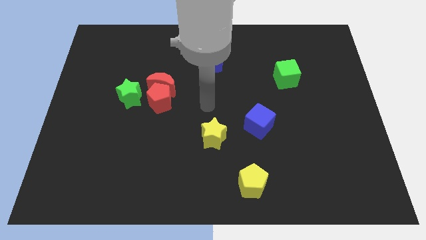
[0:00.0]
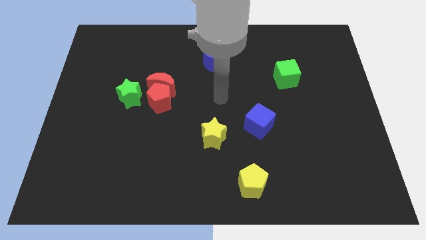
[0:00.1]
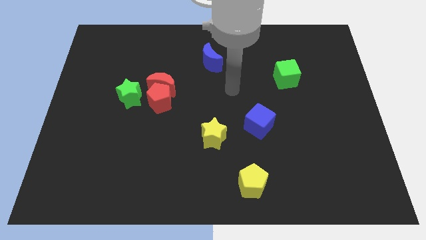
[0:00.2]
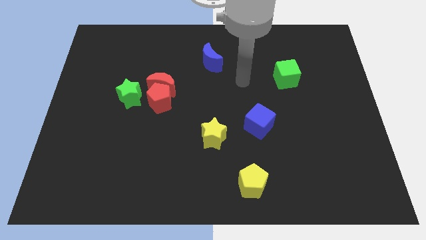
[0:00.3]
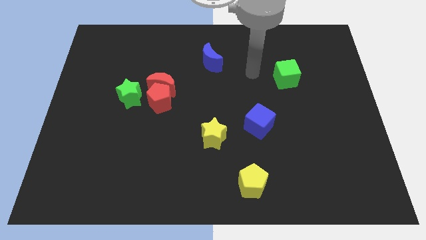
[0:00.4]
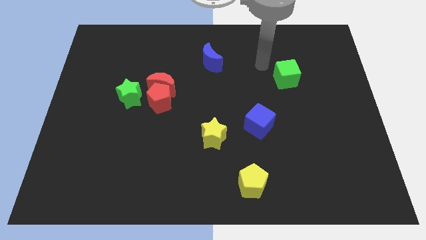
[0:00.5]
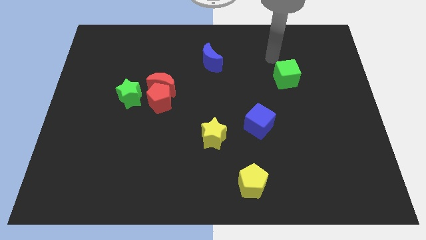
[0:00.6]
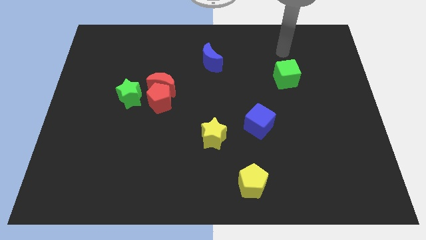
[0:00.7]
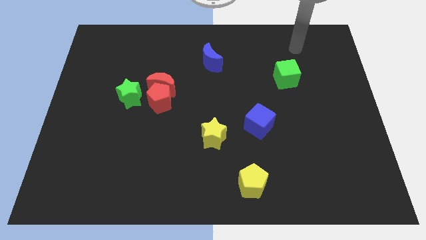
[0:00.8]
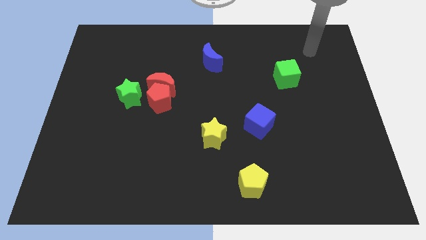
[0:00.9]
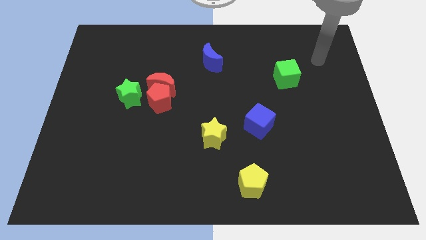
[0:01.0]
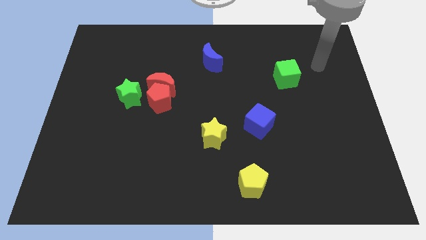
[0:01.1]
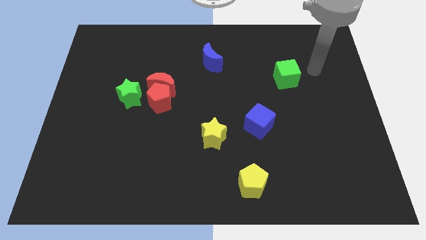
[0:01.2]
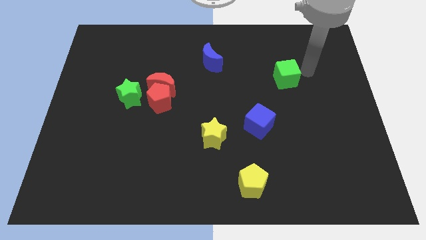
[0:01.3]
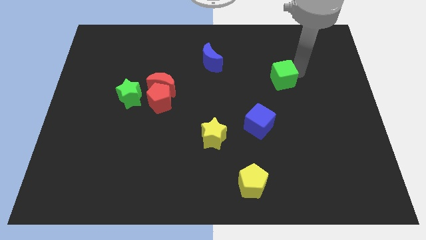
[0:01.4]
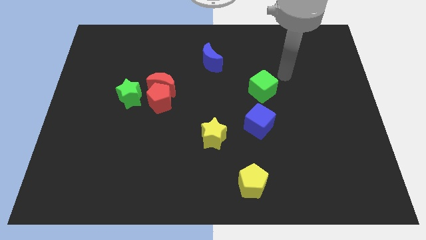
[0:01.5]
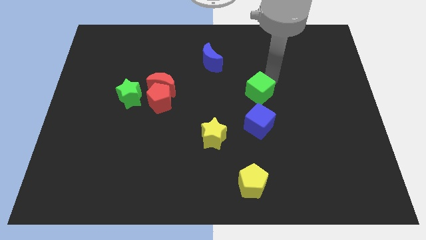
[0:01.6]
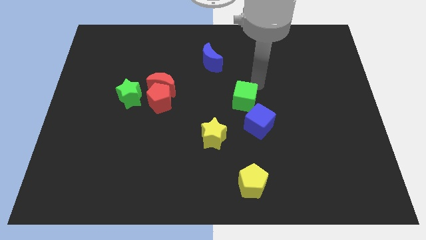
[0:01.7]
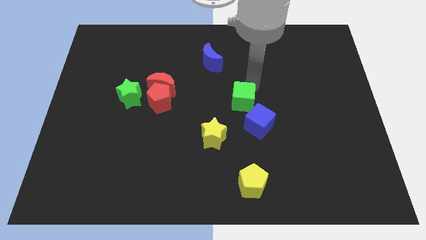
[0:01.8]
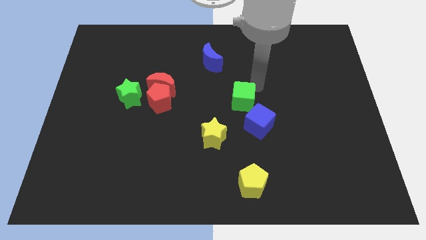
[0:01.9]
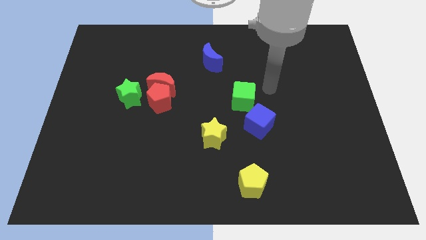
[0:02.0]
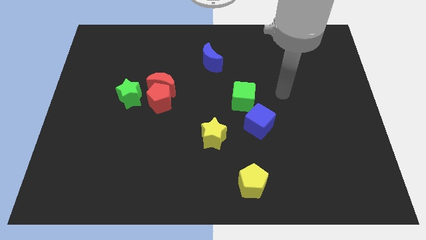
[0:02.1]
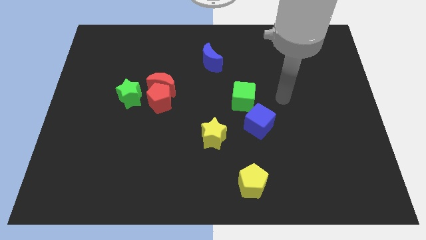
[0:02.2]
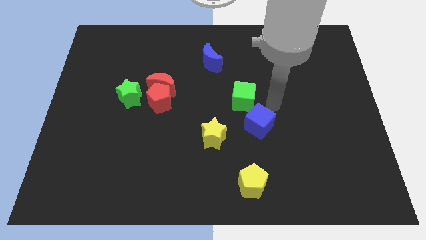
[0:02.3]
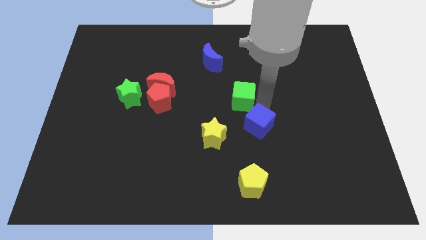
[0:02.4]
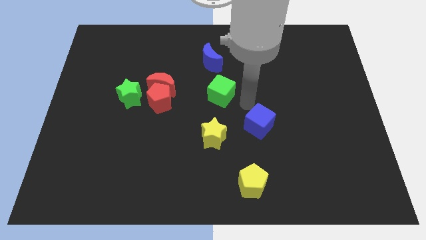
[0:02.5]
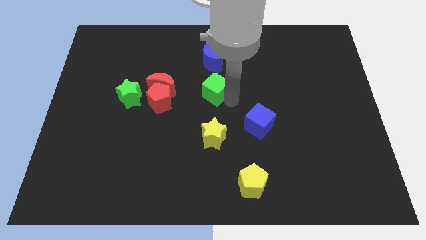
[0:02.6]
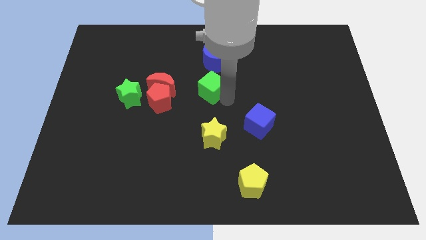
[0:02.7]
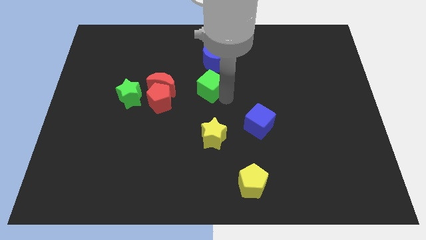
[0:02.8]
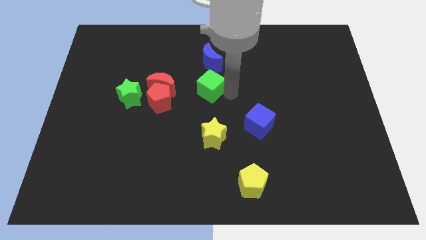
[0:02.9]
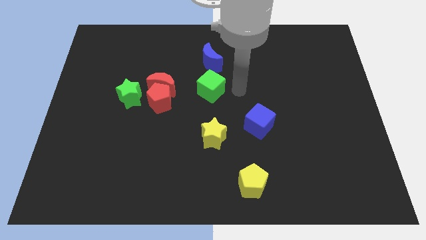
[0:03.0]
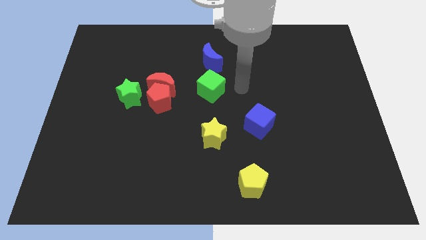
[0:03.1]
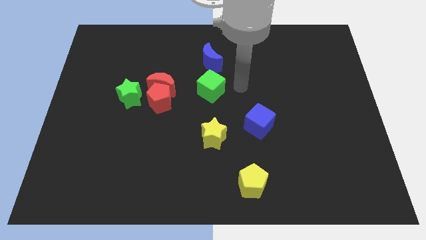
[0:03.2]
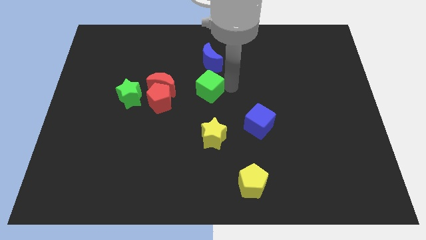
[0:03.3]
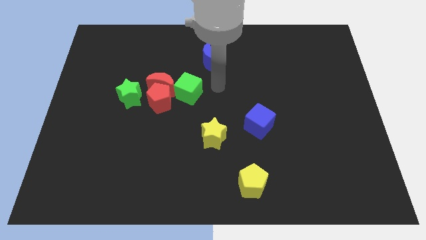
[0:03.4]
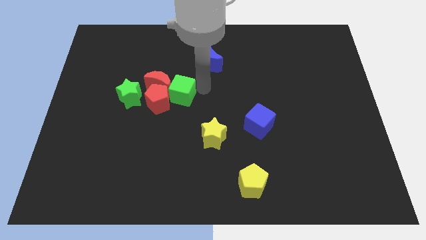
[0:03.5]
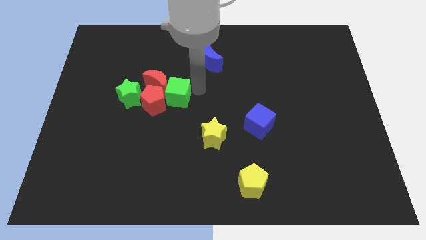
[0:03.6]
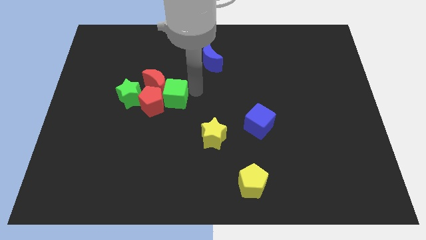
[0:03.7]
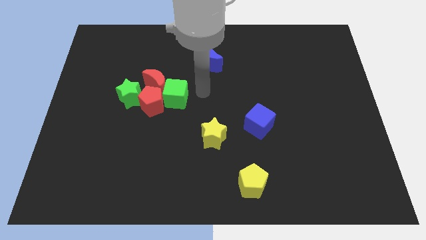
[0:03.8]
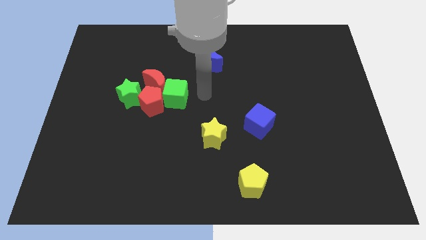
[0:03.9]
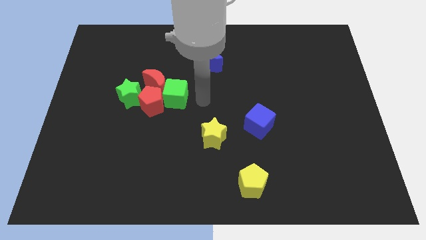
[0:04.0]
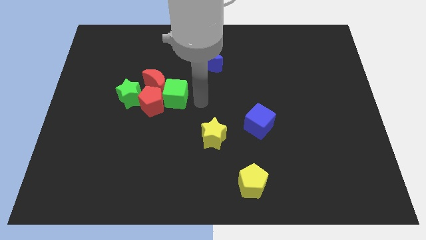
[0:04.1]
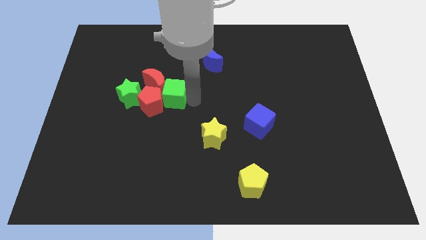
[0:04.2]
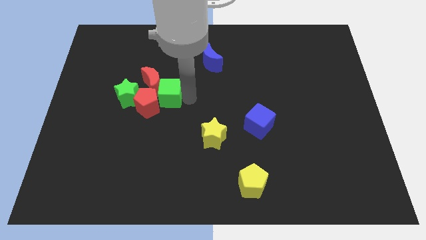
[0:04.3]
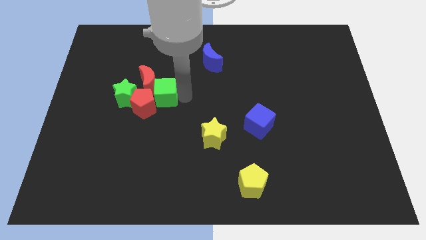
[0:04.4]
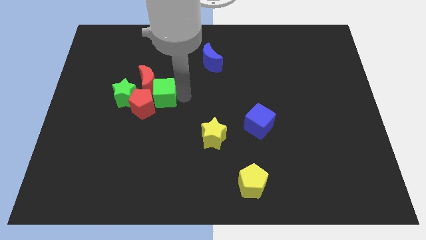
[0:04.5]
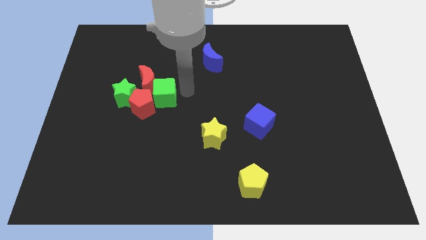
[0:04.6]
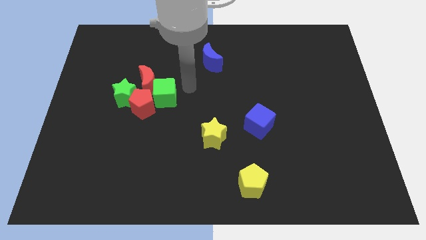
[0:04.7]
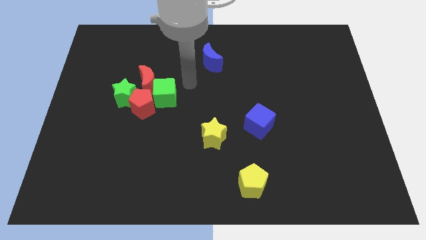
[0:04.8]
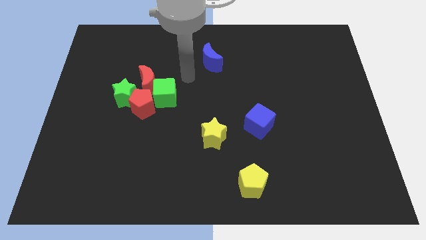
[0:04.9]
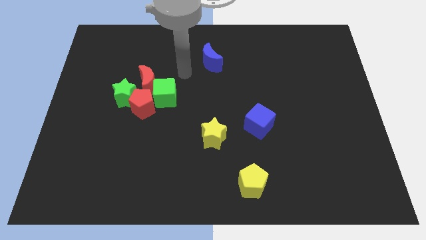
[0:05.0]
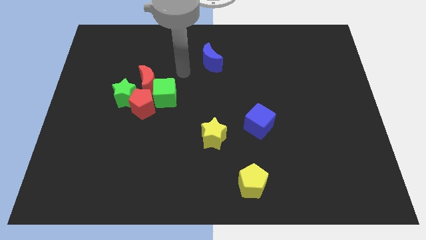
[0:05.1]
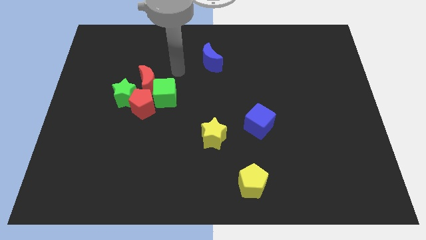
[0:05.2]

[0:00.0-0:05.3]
push the green cube into the red blocks

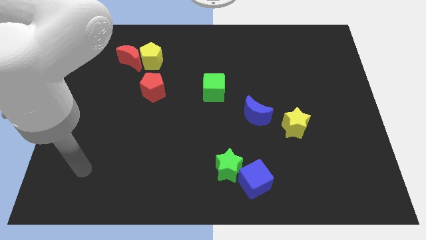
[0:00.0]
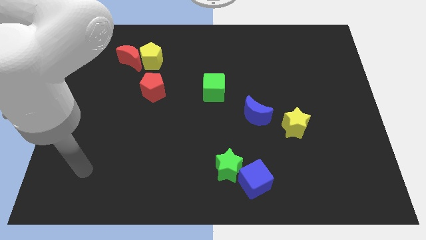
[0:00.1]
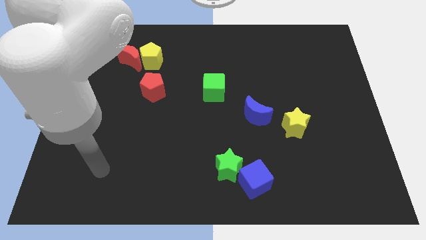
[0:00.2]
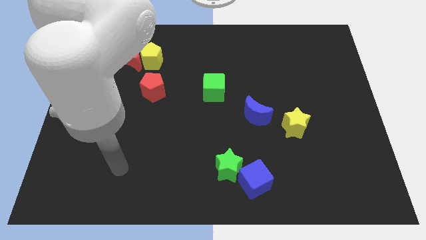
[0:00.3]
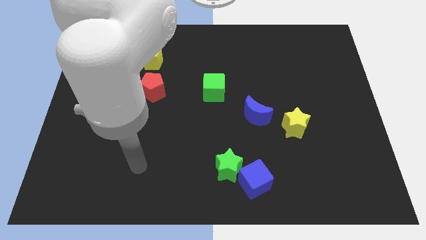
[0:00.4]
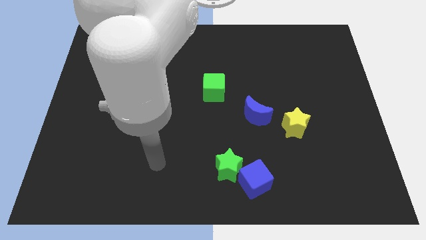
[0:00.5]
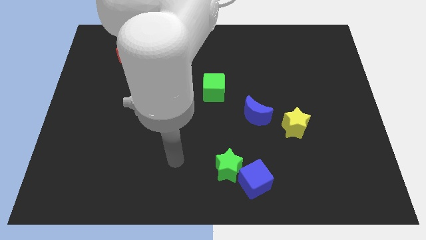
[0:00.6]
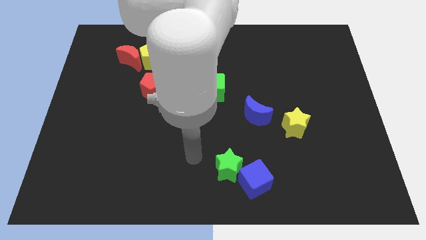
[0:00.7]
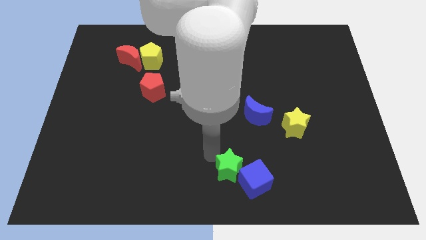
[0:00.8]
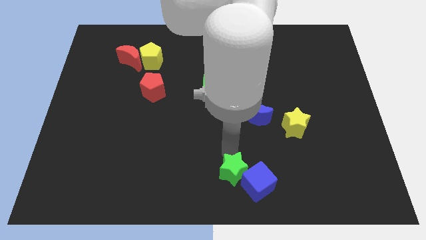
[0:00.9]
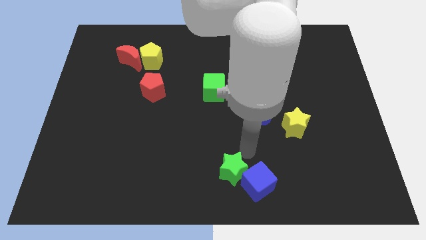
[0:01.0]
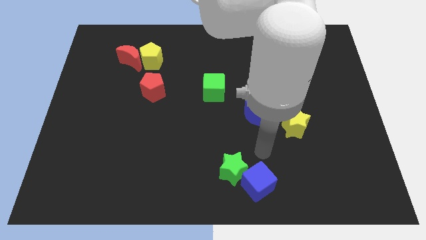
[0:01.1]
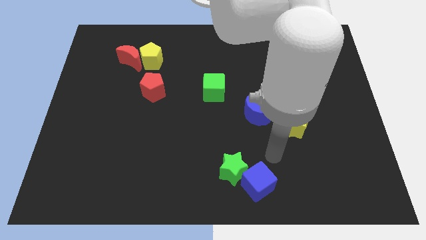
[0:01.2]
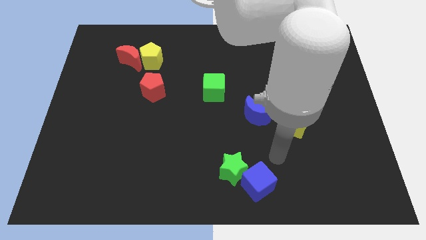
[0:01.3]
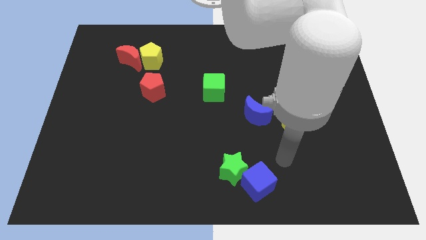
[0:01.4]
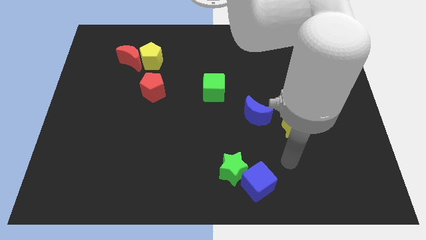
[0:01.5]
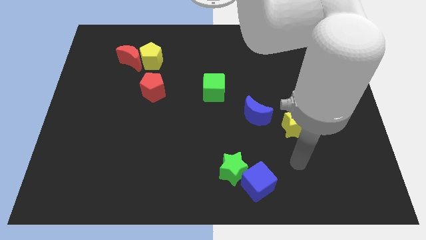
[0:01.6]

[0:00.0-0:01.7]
tap the green star

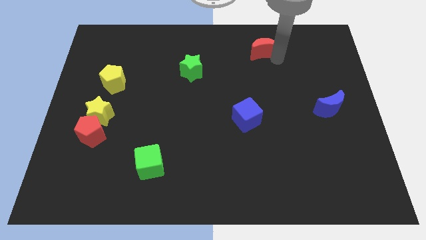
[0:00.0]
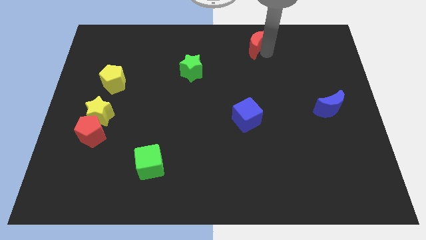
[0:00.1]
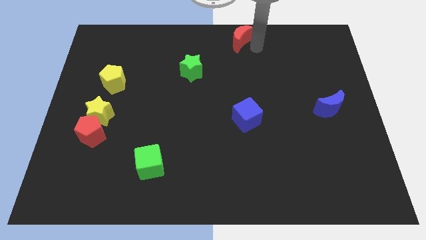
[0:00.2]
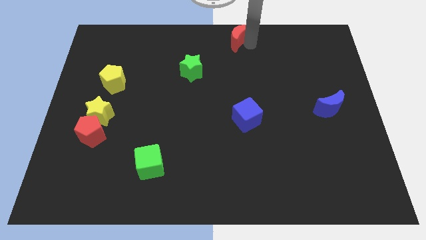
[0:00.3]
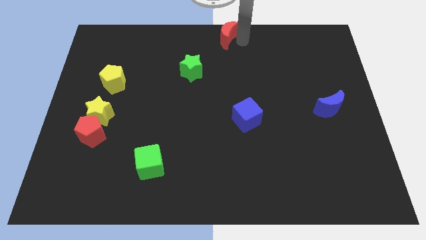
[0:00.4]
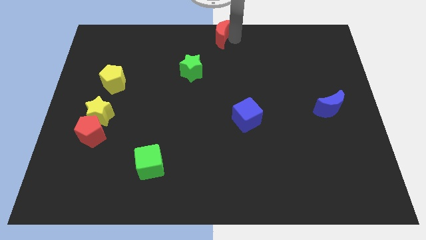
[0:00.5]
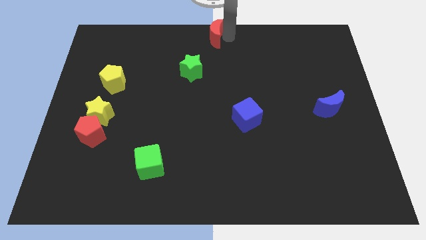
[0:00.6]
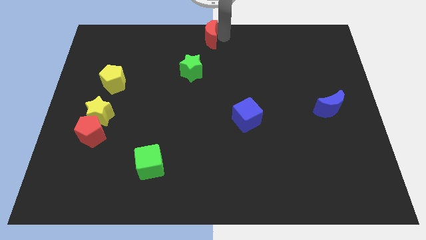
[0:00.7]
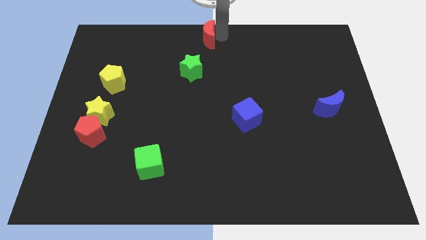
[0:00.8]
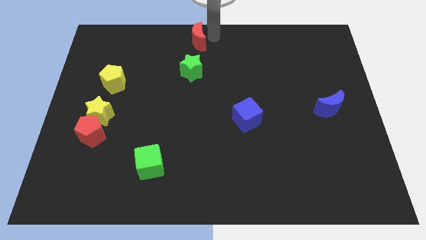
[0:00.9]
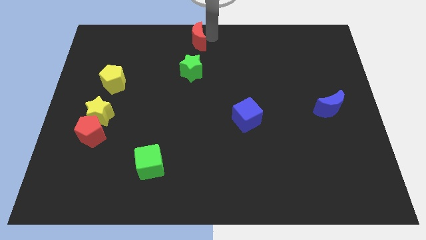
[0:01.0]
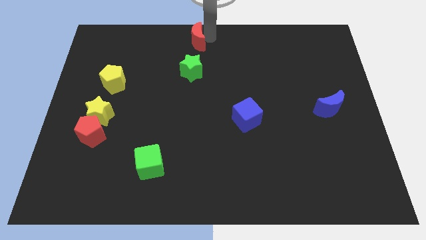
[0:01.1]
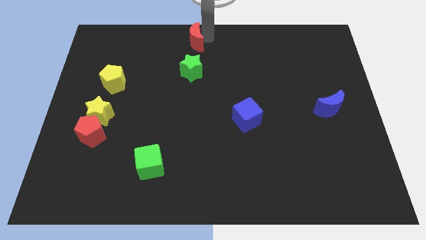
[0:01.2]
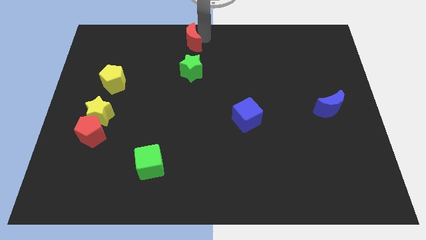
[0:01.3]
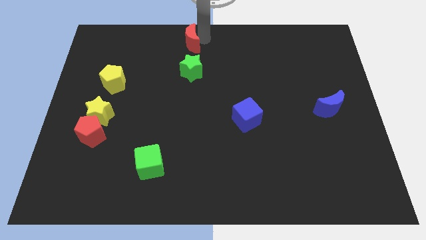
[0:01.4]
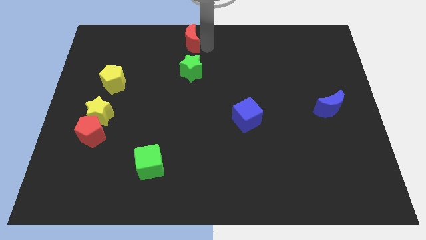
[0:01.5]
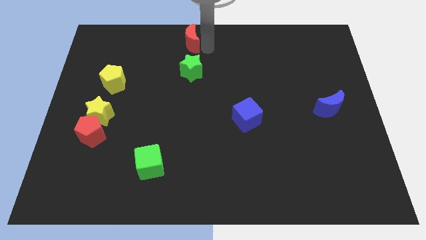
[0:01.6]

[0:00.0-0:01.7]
push the red moon to the left

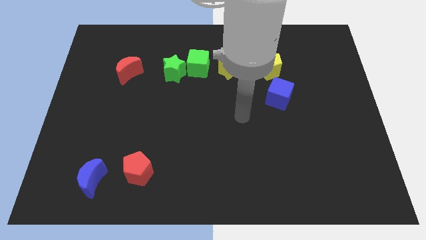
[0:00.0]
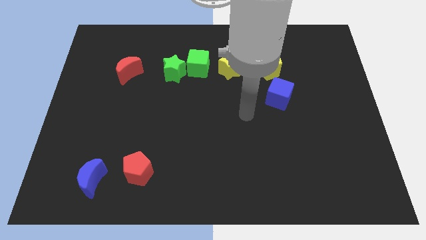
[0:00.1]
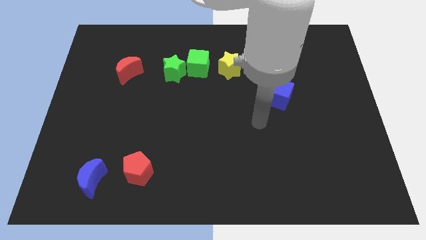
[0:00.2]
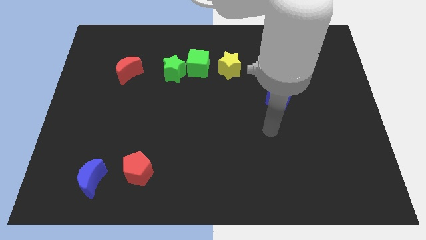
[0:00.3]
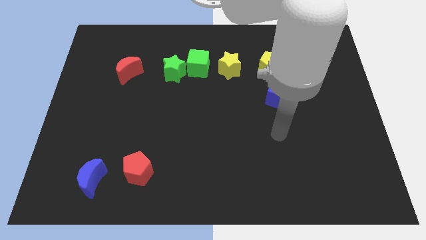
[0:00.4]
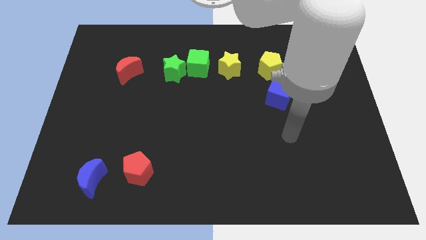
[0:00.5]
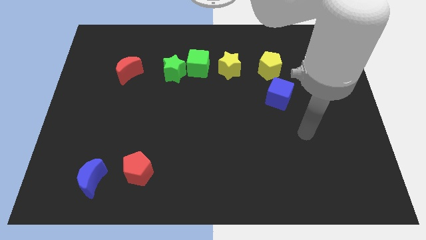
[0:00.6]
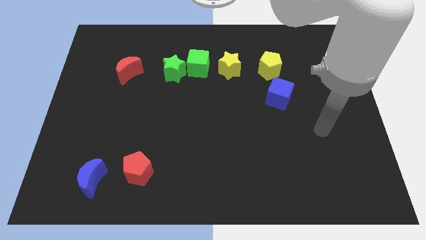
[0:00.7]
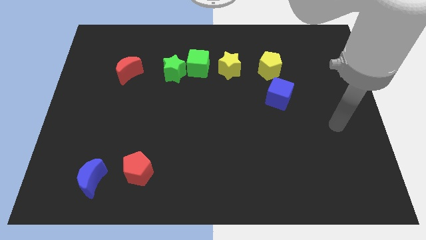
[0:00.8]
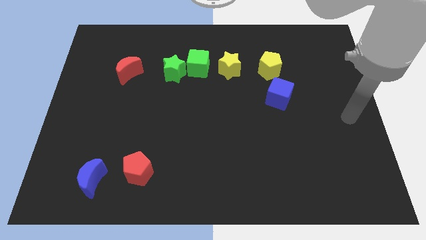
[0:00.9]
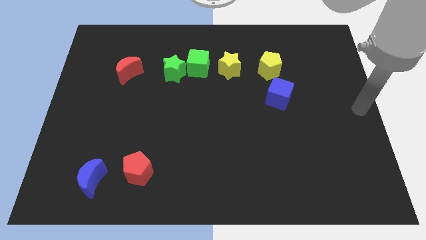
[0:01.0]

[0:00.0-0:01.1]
move your arm towards center right
